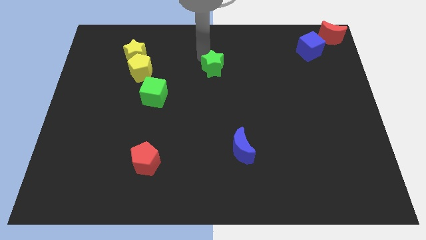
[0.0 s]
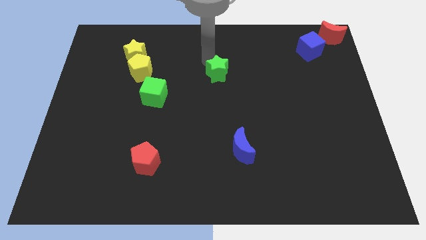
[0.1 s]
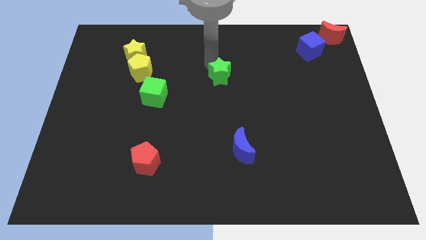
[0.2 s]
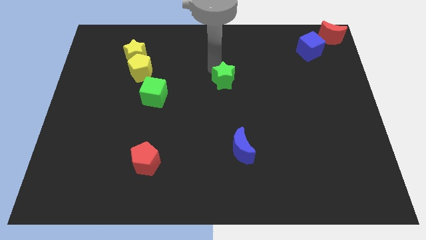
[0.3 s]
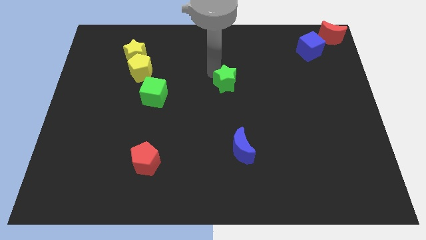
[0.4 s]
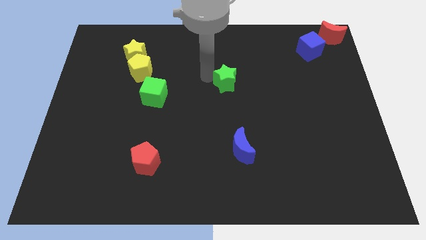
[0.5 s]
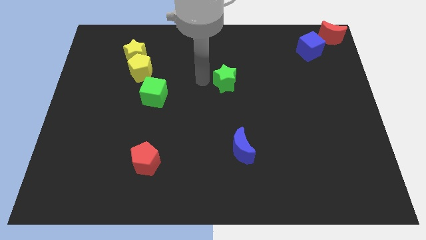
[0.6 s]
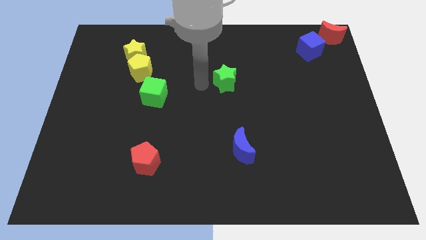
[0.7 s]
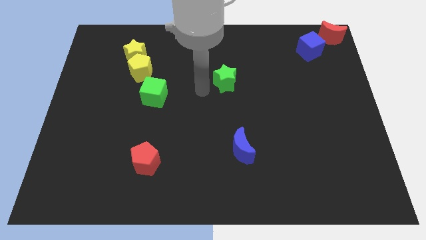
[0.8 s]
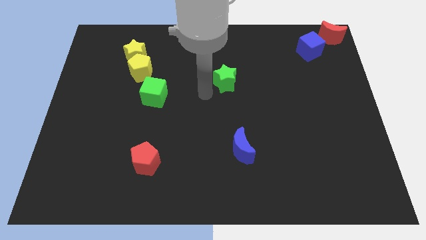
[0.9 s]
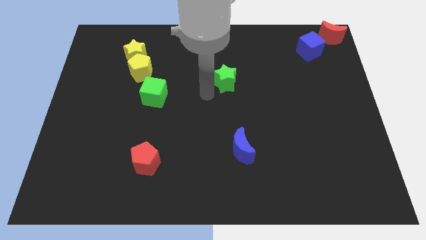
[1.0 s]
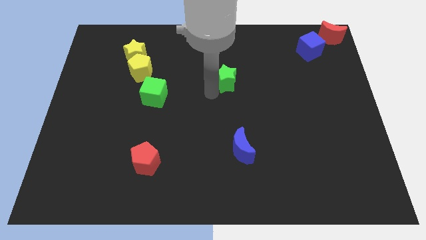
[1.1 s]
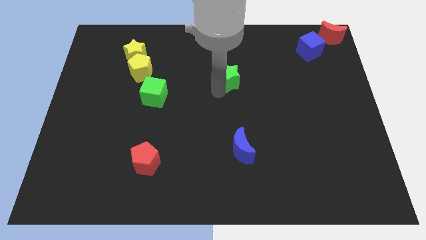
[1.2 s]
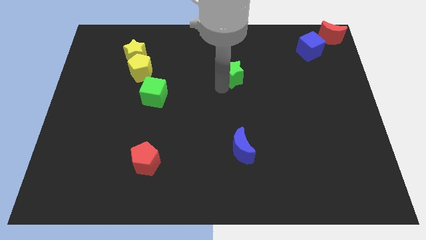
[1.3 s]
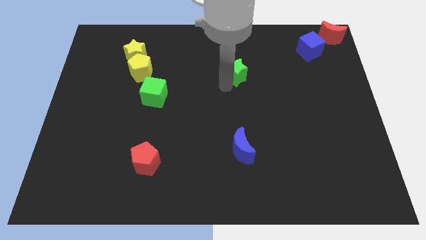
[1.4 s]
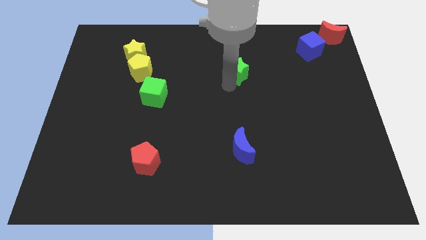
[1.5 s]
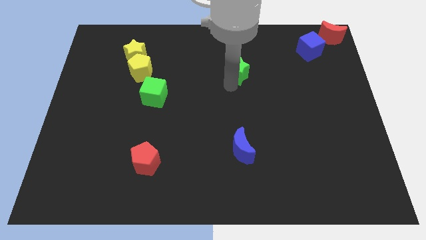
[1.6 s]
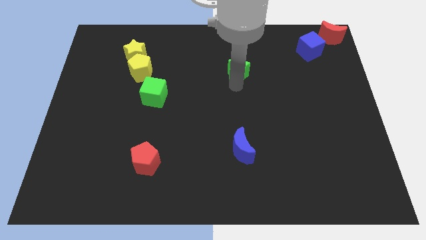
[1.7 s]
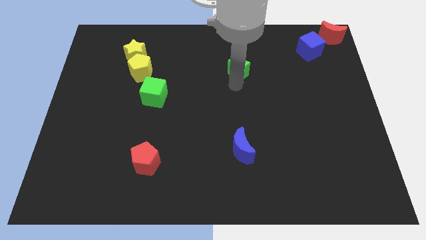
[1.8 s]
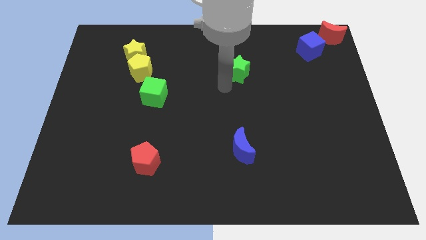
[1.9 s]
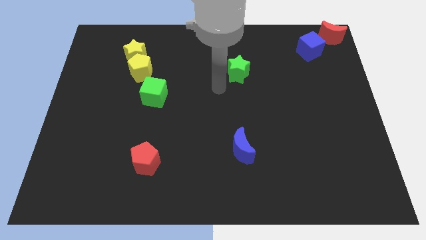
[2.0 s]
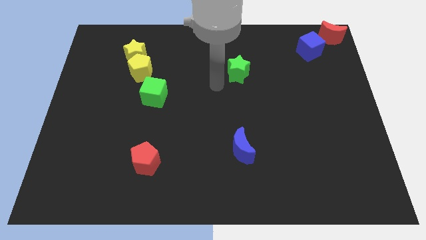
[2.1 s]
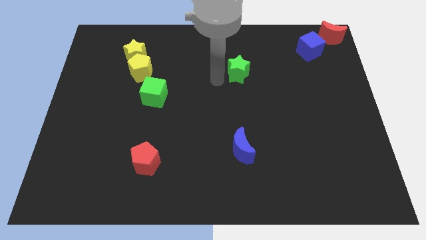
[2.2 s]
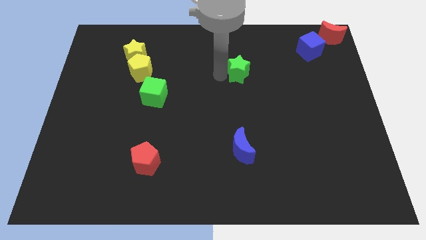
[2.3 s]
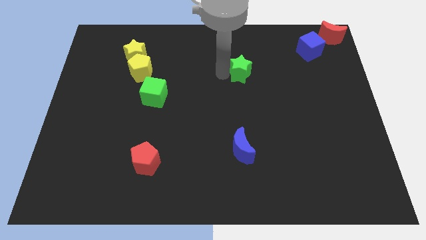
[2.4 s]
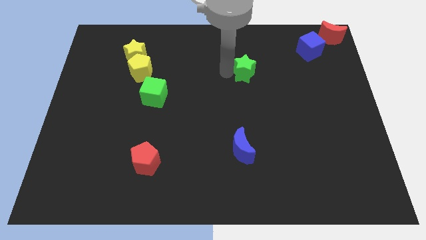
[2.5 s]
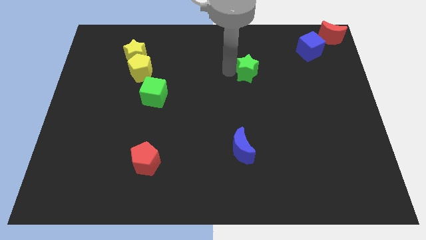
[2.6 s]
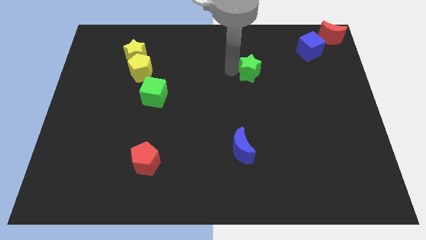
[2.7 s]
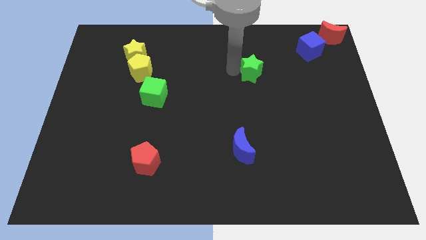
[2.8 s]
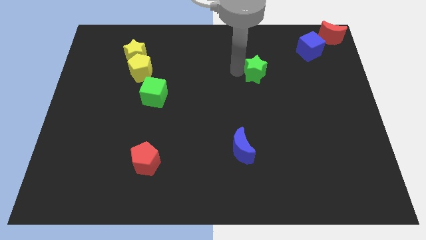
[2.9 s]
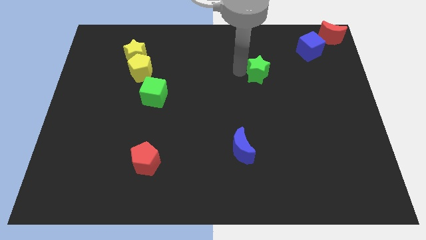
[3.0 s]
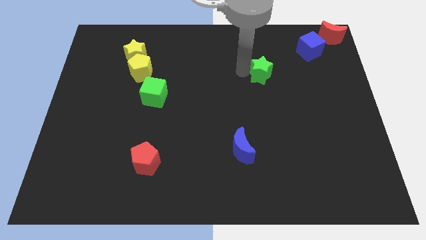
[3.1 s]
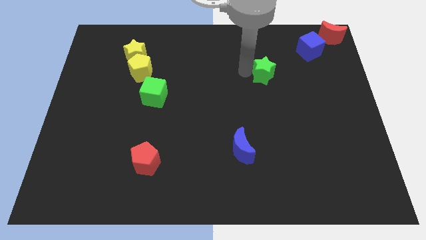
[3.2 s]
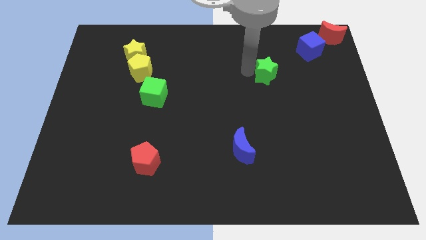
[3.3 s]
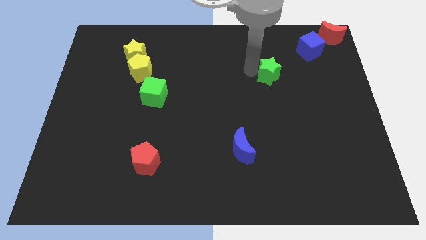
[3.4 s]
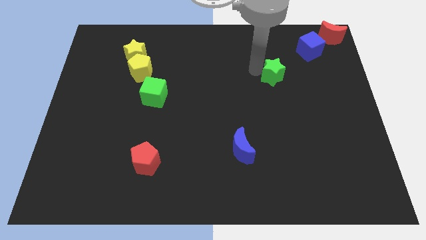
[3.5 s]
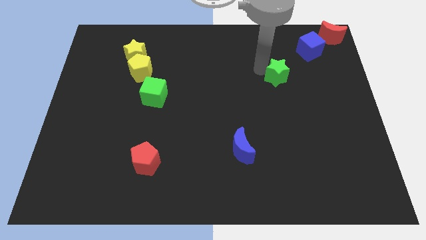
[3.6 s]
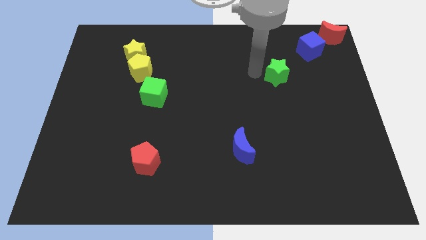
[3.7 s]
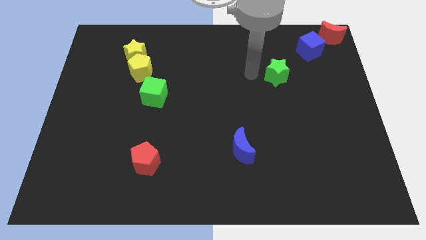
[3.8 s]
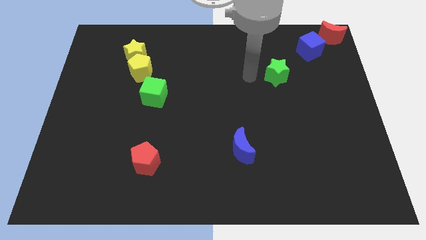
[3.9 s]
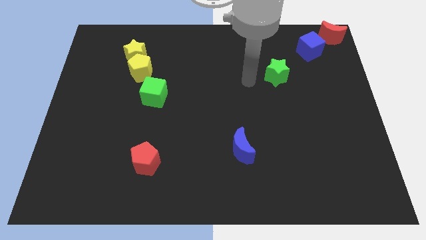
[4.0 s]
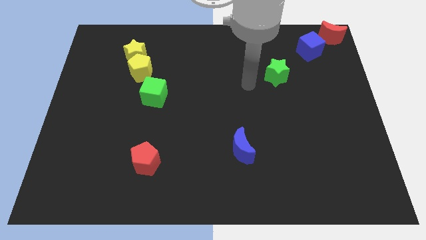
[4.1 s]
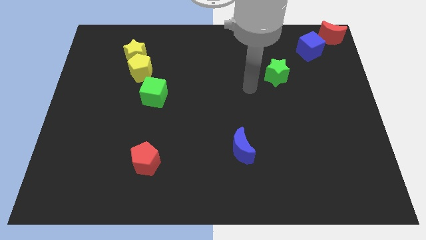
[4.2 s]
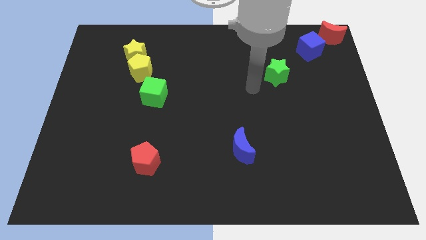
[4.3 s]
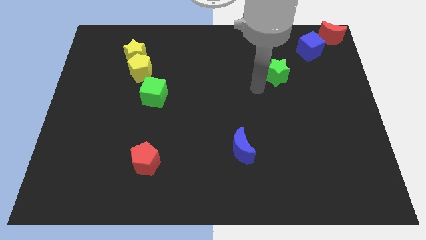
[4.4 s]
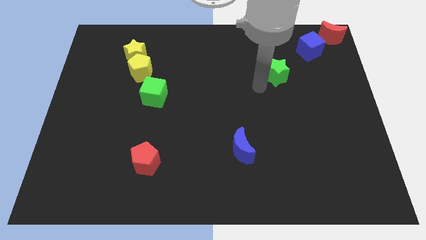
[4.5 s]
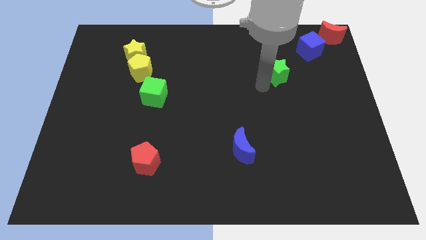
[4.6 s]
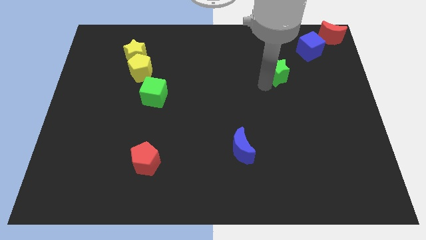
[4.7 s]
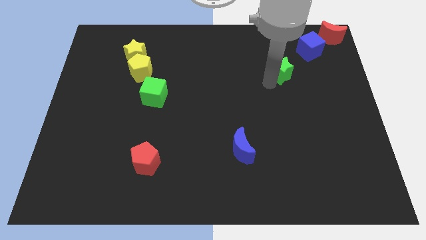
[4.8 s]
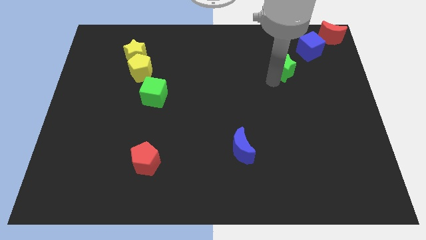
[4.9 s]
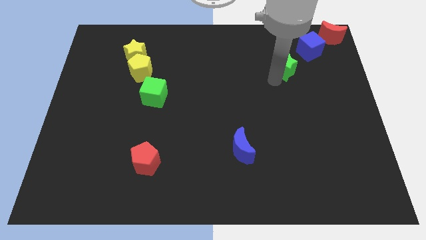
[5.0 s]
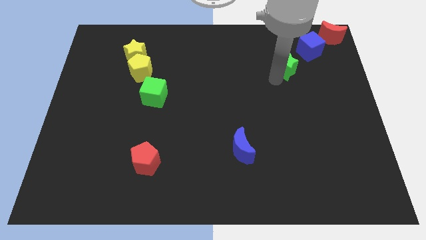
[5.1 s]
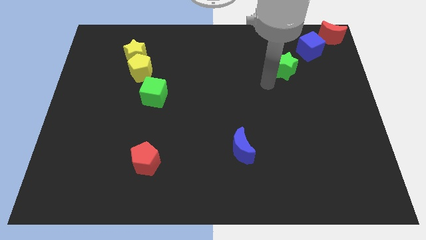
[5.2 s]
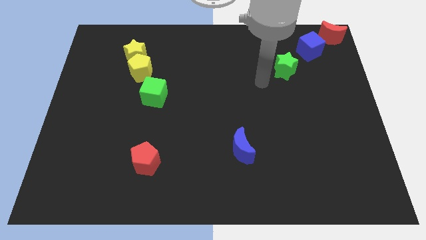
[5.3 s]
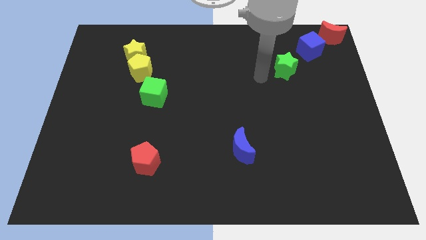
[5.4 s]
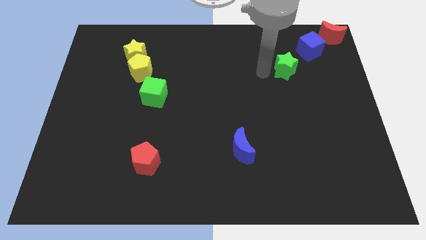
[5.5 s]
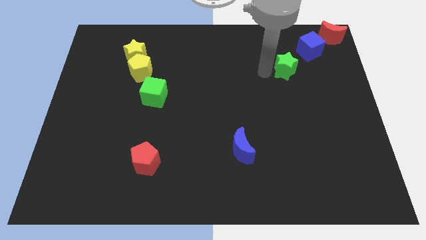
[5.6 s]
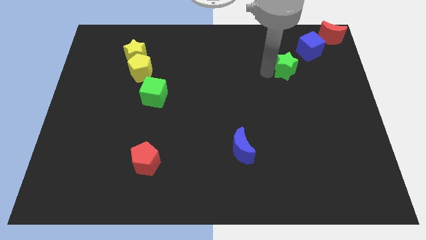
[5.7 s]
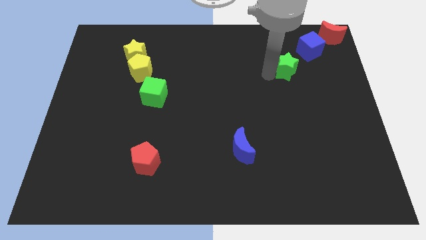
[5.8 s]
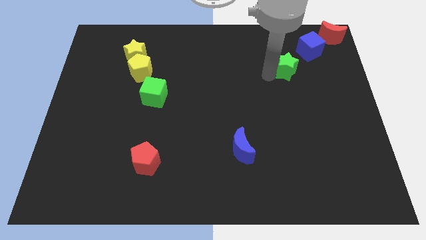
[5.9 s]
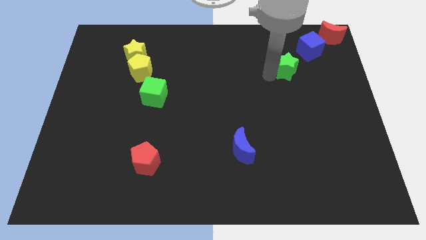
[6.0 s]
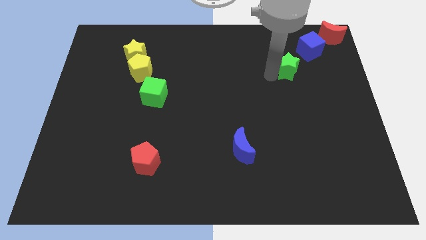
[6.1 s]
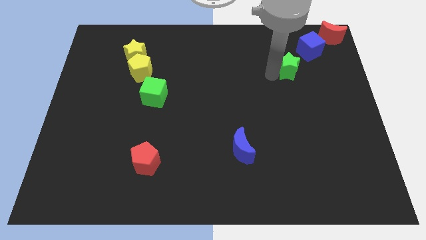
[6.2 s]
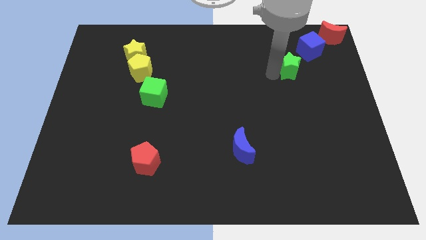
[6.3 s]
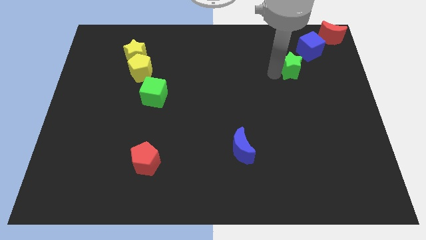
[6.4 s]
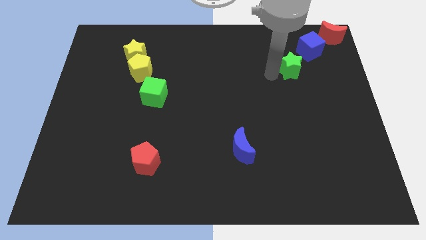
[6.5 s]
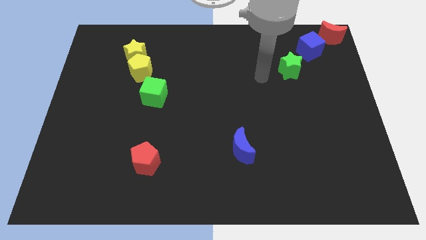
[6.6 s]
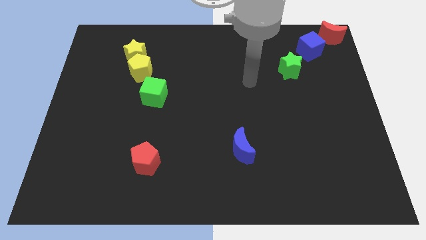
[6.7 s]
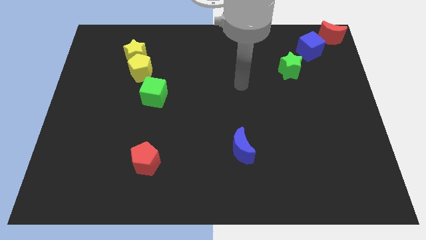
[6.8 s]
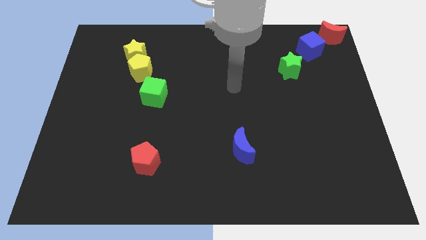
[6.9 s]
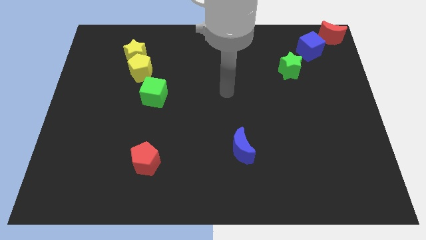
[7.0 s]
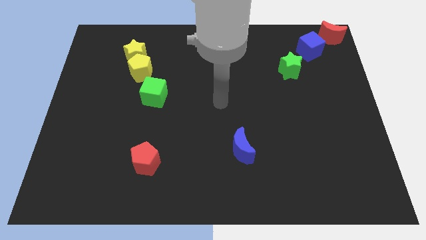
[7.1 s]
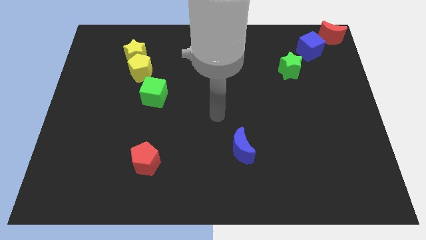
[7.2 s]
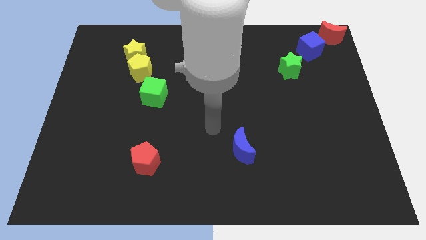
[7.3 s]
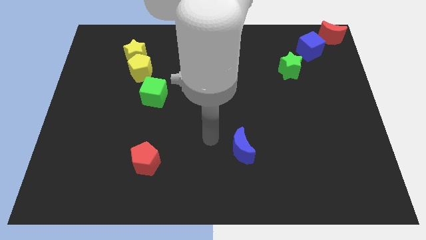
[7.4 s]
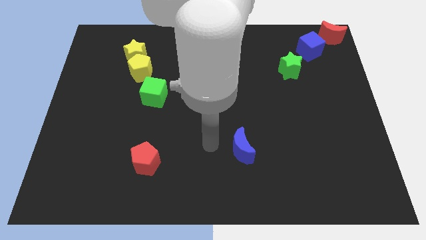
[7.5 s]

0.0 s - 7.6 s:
push the green star to the left bottom of the blue cube

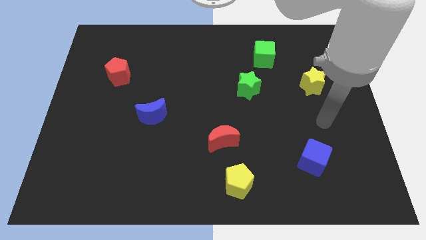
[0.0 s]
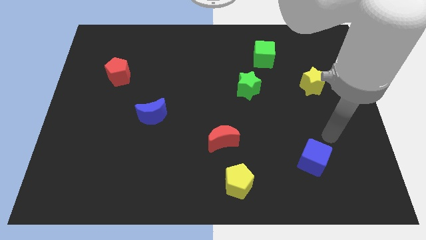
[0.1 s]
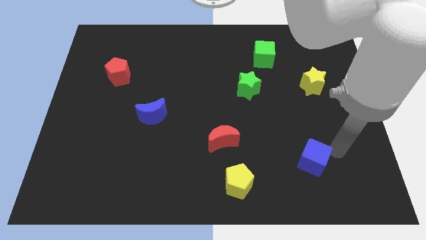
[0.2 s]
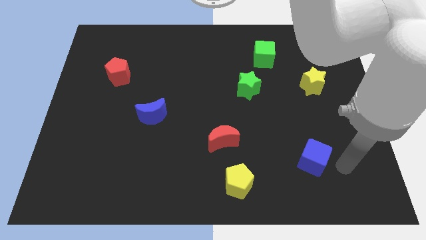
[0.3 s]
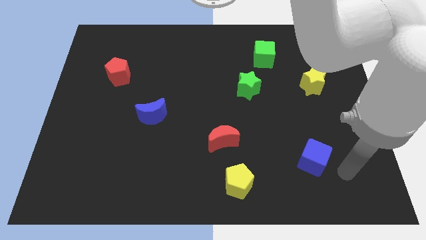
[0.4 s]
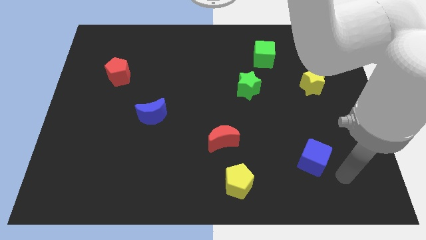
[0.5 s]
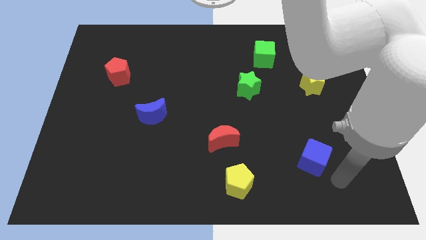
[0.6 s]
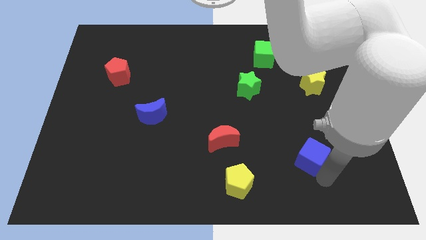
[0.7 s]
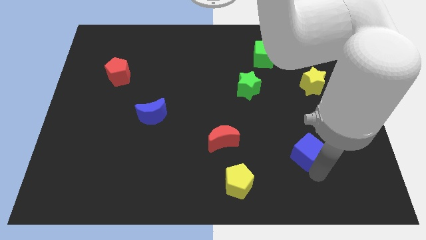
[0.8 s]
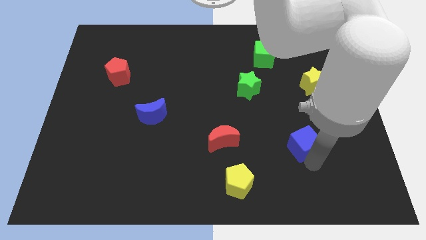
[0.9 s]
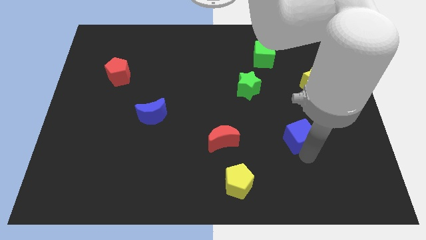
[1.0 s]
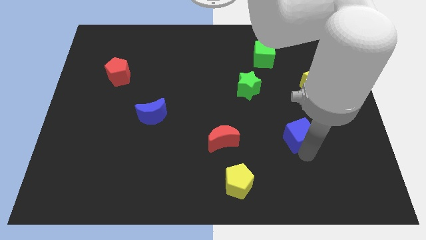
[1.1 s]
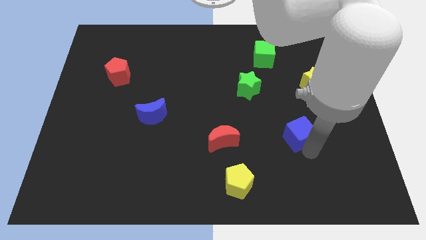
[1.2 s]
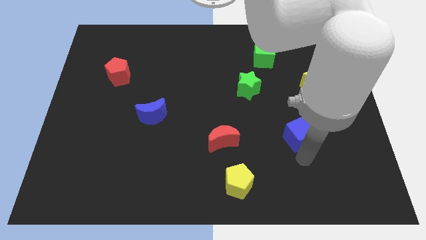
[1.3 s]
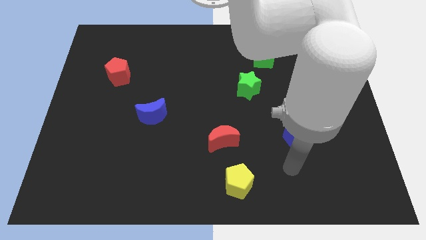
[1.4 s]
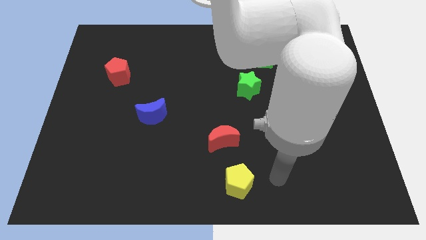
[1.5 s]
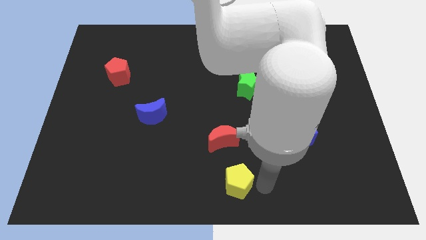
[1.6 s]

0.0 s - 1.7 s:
put the blue cube horizontally right to the red moon
